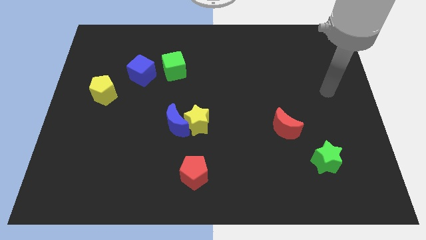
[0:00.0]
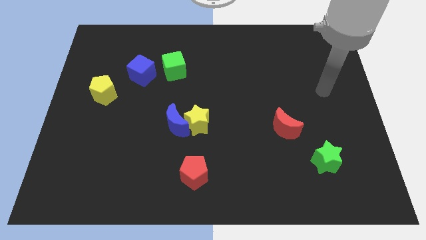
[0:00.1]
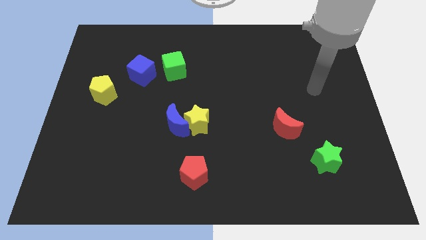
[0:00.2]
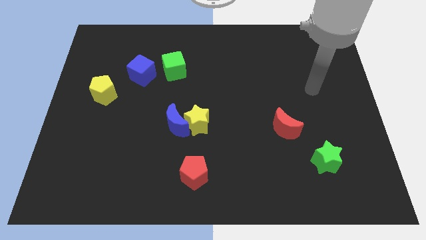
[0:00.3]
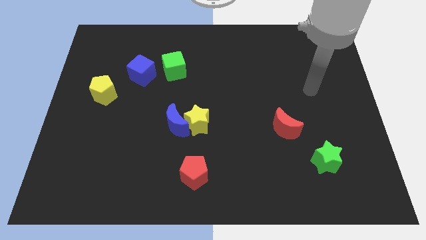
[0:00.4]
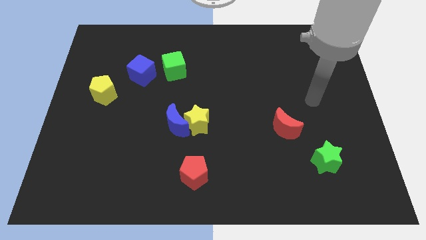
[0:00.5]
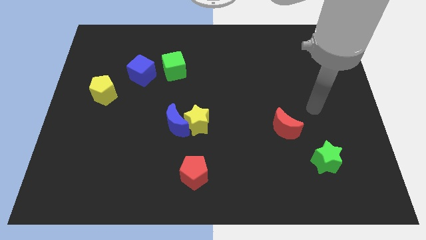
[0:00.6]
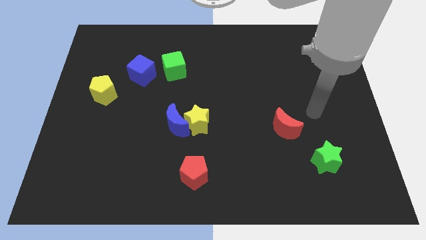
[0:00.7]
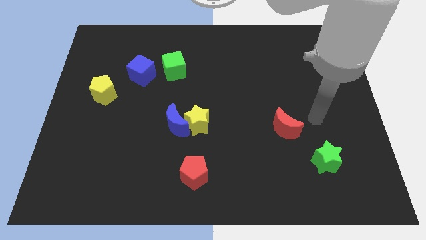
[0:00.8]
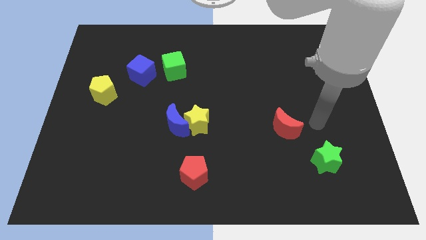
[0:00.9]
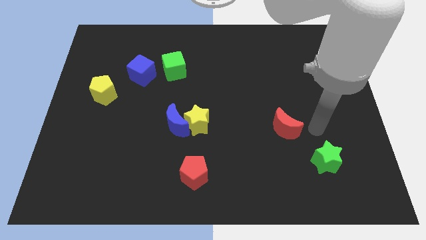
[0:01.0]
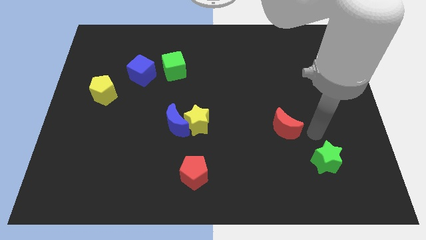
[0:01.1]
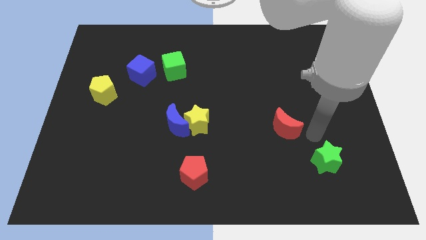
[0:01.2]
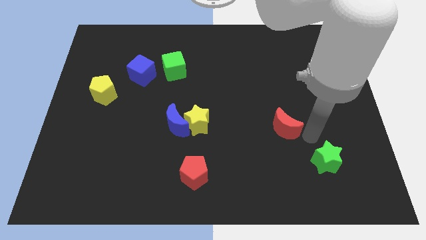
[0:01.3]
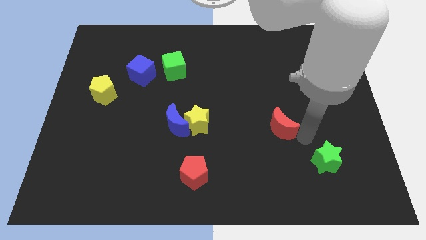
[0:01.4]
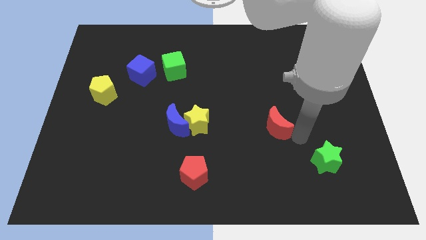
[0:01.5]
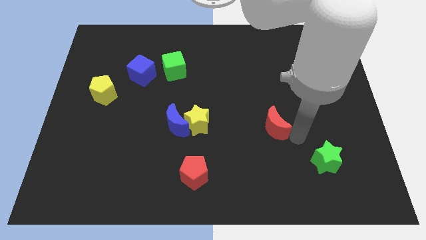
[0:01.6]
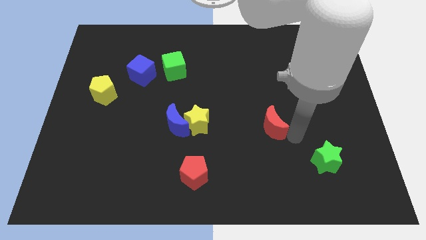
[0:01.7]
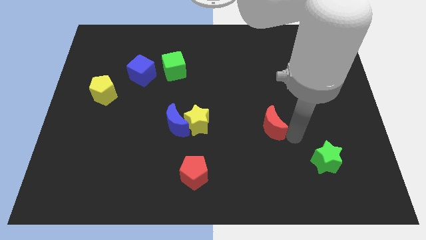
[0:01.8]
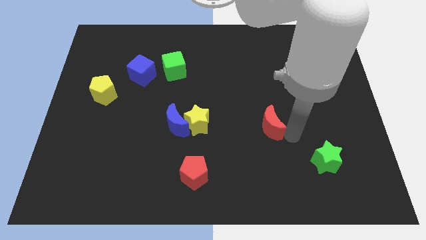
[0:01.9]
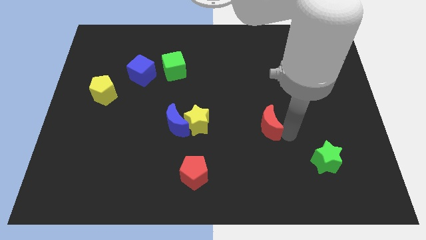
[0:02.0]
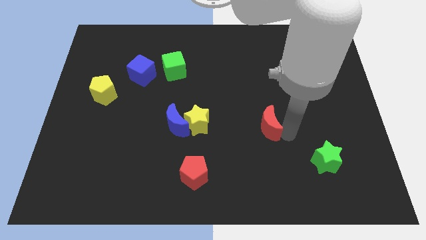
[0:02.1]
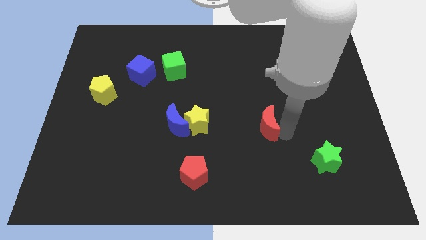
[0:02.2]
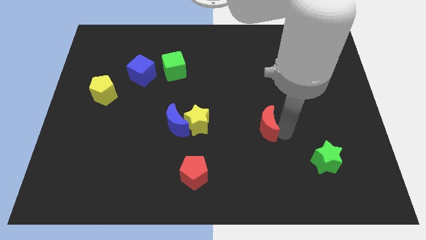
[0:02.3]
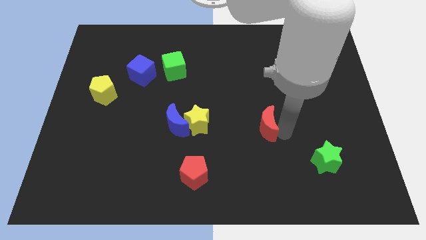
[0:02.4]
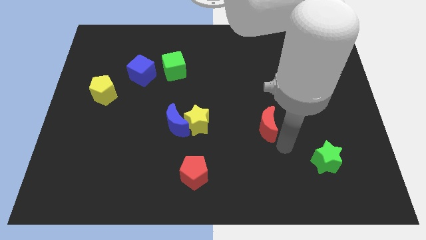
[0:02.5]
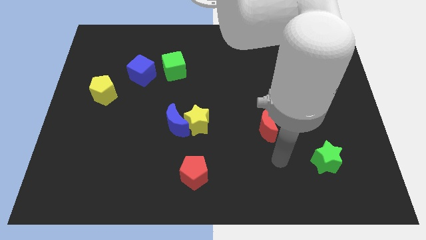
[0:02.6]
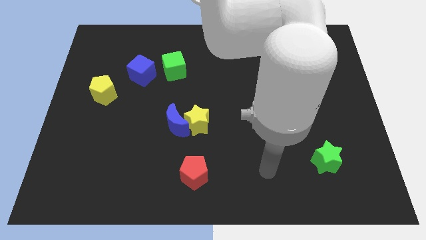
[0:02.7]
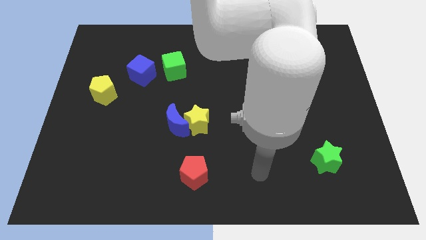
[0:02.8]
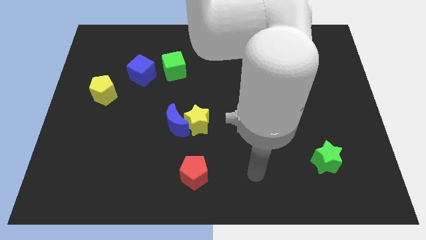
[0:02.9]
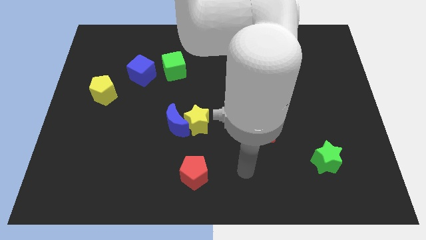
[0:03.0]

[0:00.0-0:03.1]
move the red moon parallel right to the yellow star

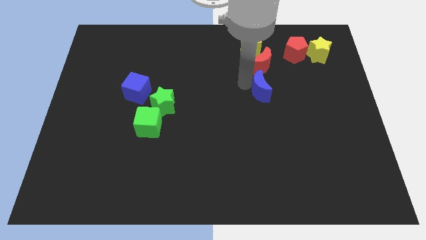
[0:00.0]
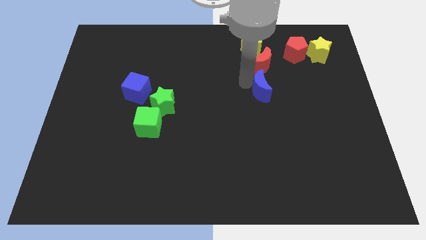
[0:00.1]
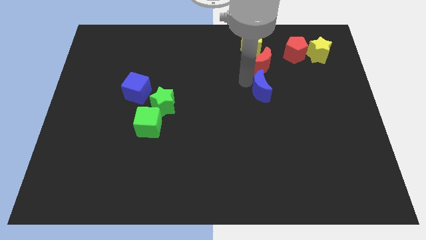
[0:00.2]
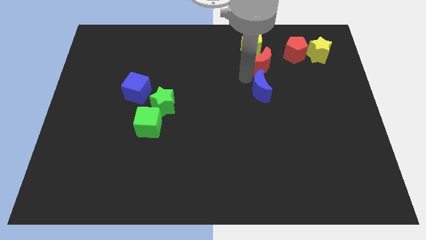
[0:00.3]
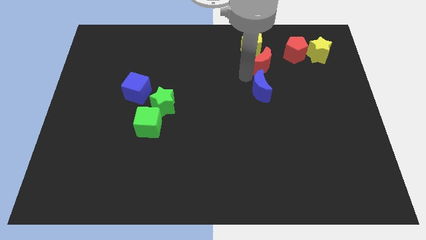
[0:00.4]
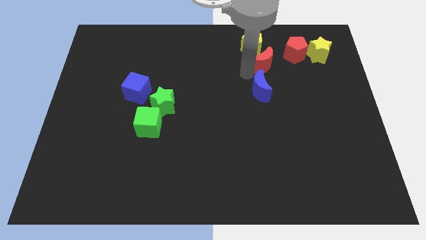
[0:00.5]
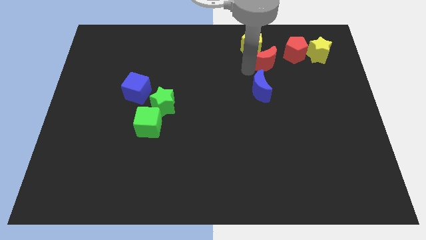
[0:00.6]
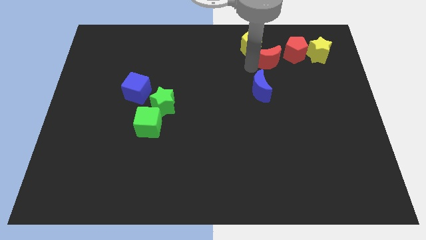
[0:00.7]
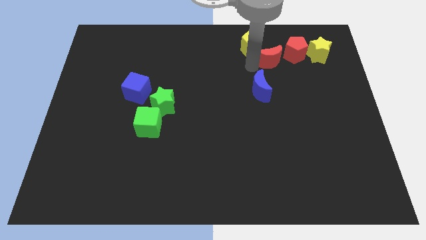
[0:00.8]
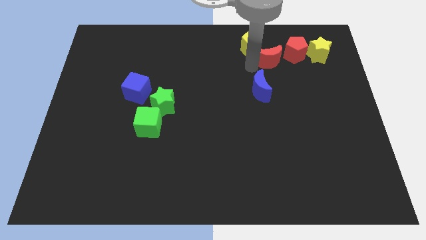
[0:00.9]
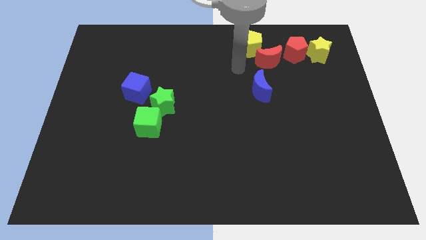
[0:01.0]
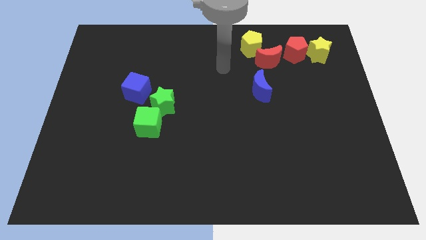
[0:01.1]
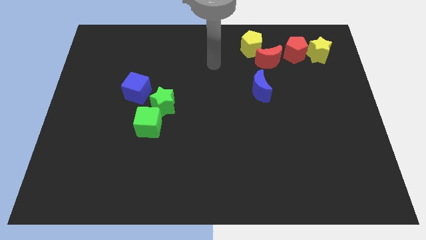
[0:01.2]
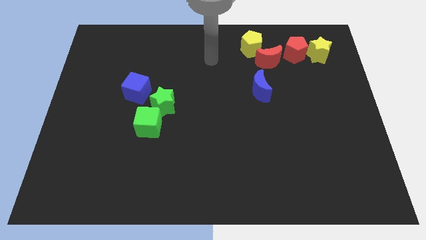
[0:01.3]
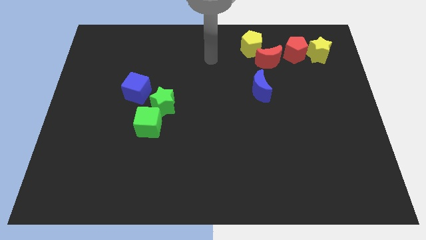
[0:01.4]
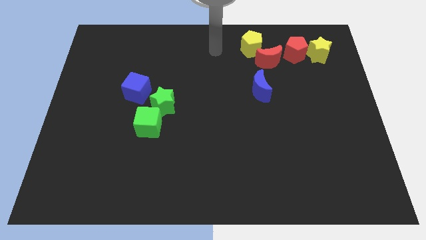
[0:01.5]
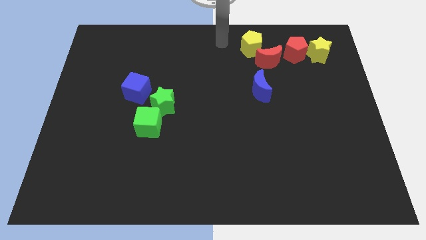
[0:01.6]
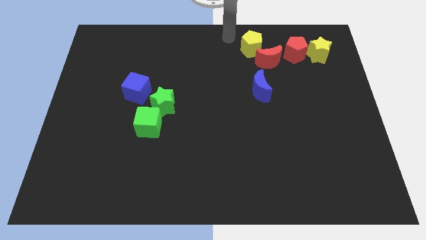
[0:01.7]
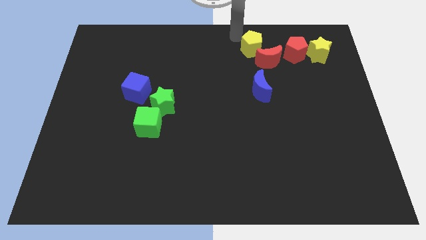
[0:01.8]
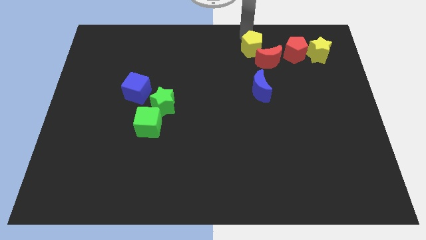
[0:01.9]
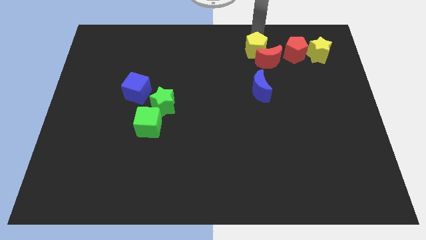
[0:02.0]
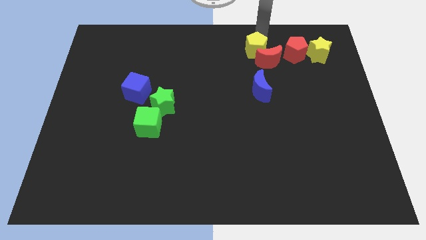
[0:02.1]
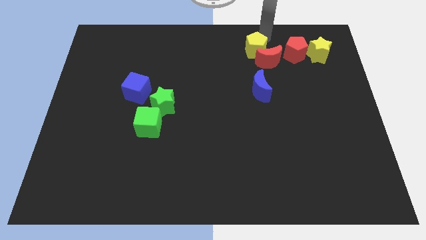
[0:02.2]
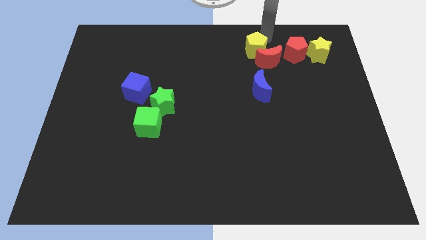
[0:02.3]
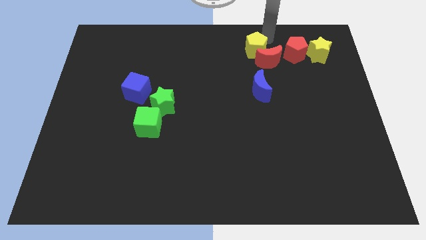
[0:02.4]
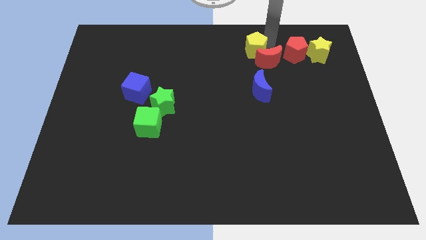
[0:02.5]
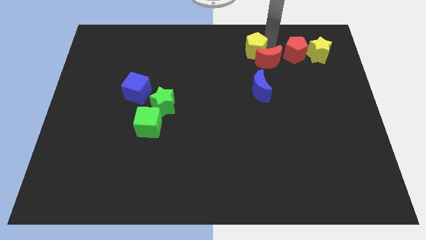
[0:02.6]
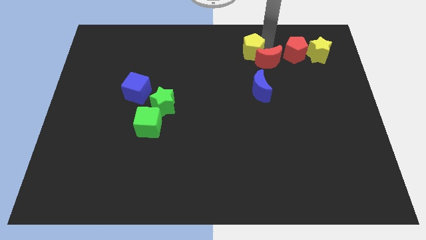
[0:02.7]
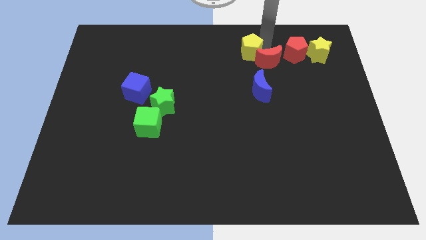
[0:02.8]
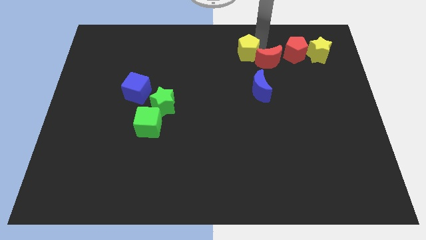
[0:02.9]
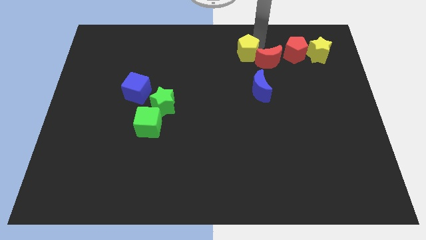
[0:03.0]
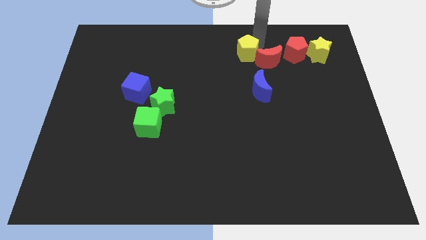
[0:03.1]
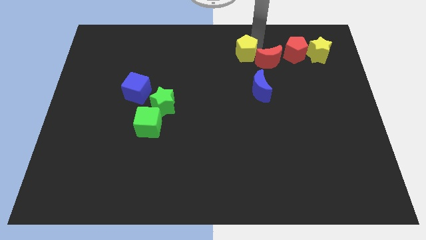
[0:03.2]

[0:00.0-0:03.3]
move yellow pentagon slightly left

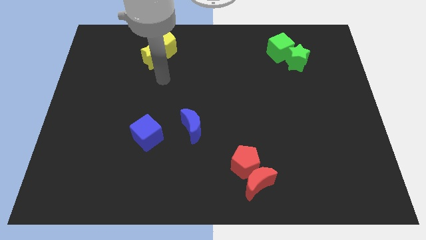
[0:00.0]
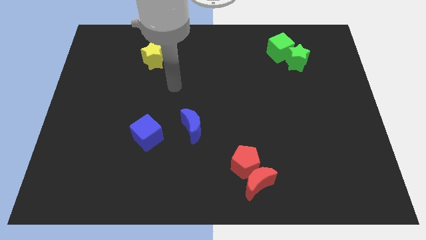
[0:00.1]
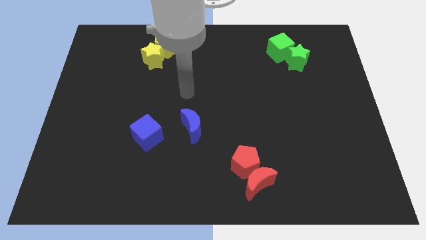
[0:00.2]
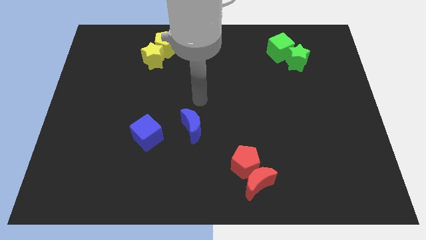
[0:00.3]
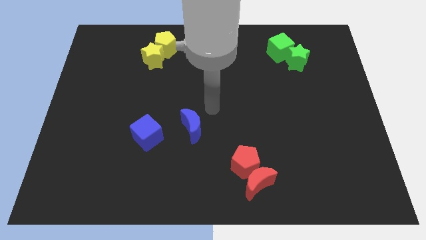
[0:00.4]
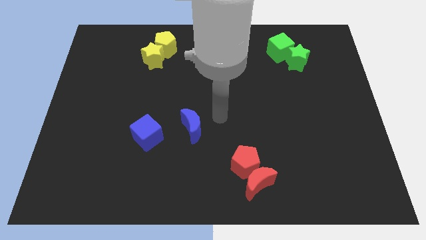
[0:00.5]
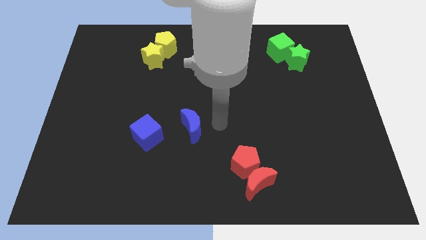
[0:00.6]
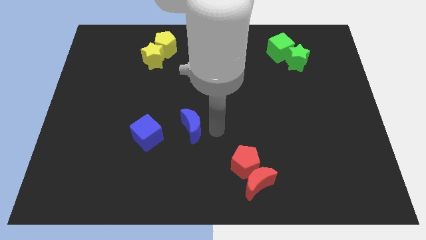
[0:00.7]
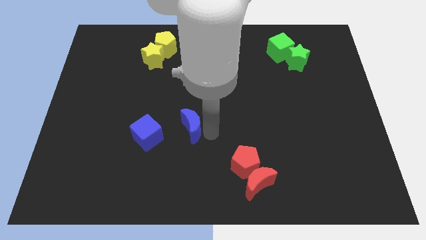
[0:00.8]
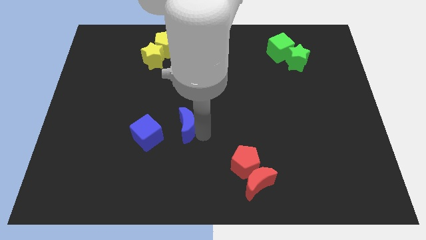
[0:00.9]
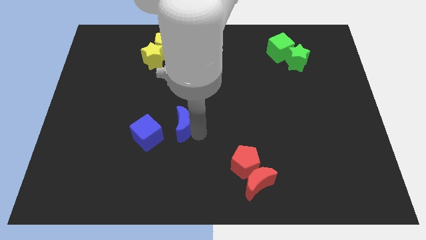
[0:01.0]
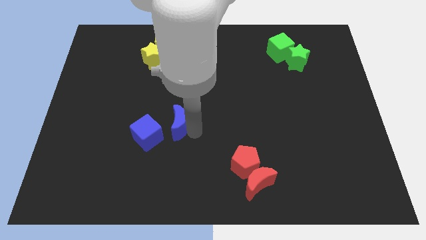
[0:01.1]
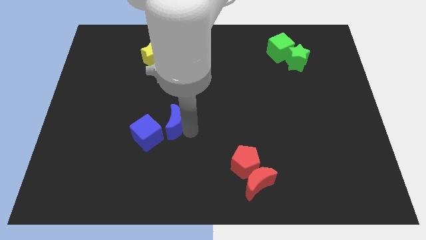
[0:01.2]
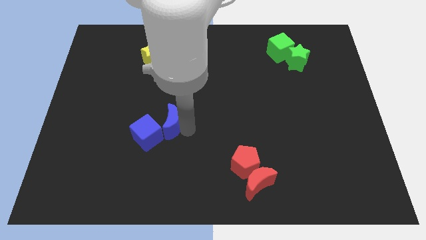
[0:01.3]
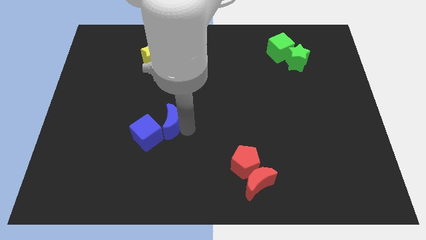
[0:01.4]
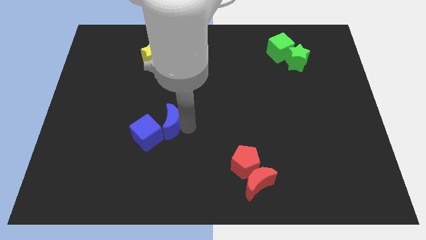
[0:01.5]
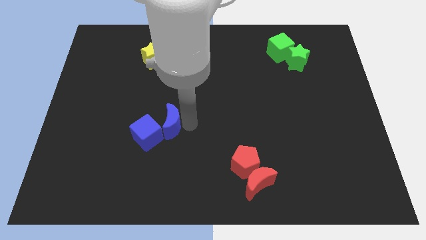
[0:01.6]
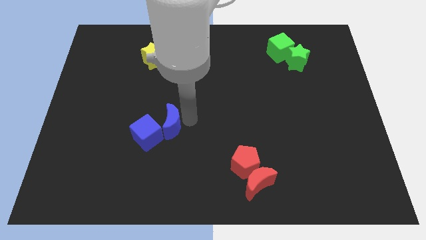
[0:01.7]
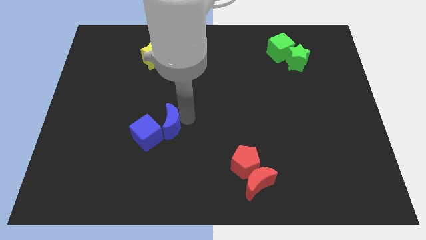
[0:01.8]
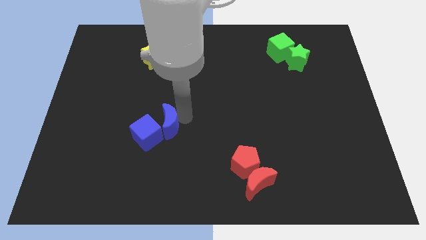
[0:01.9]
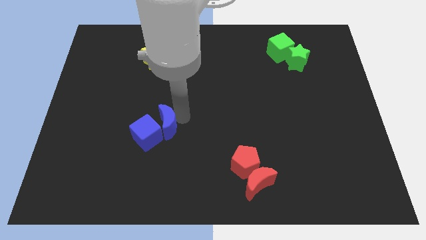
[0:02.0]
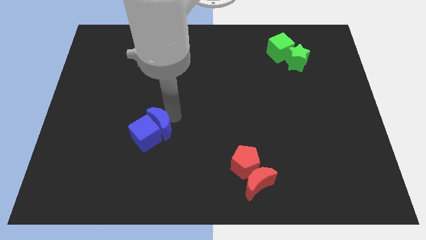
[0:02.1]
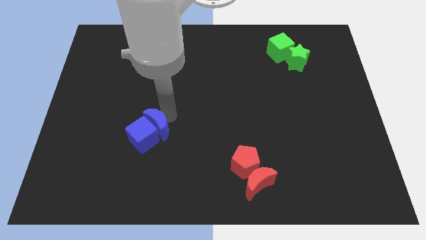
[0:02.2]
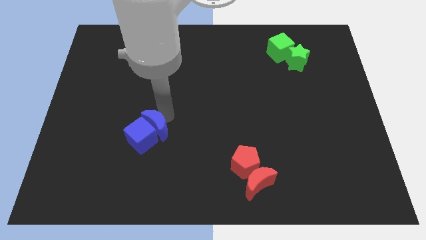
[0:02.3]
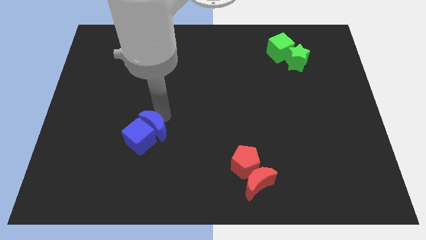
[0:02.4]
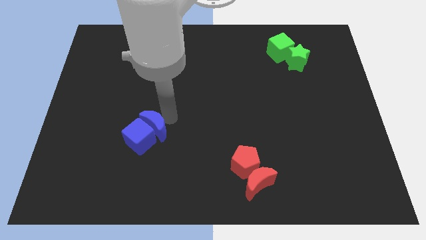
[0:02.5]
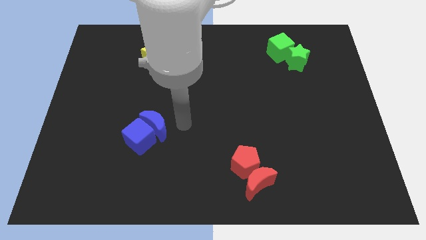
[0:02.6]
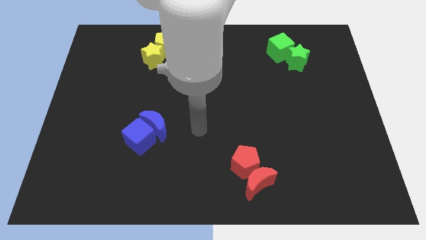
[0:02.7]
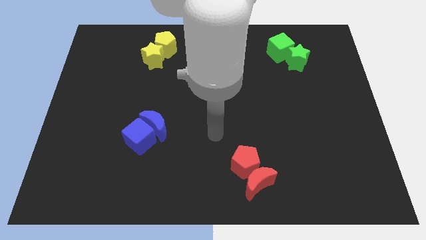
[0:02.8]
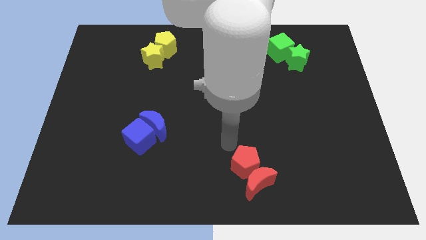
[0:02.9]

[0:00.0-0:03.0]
push the blue crescent to the right of the blue cube
